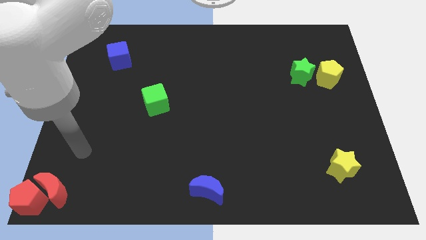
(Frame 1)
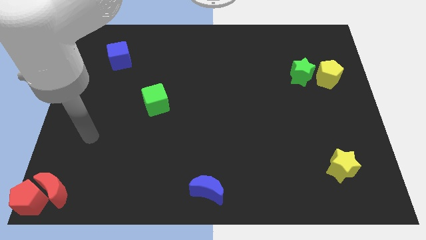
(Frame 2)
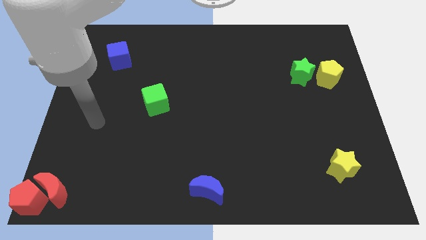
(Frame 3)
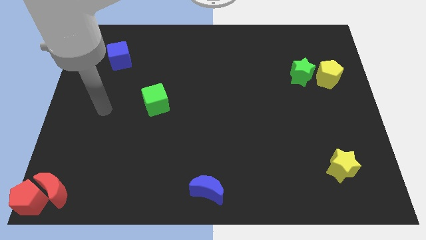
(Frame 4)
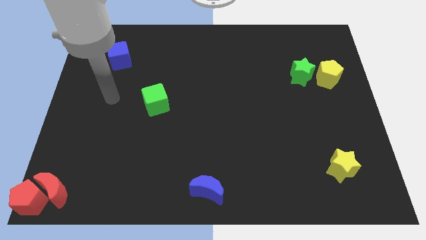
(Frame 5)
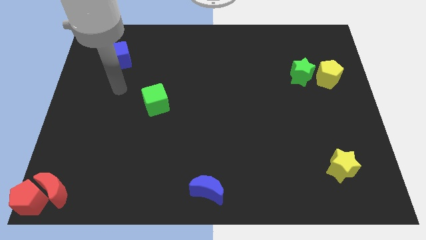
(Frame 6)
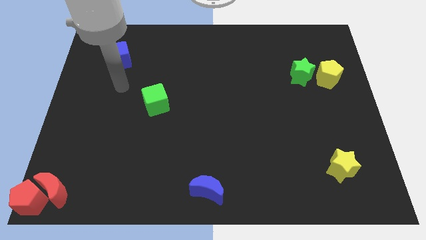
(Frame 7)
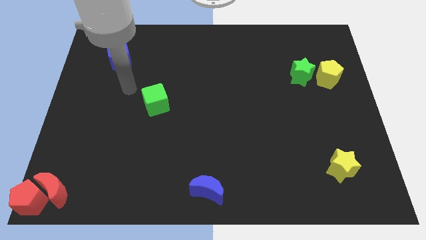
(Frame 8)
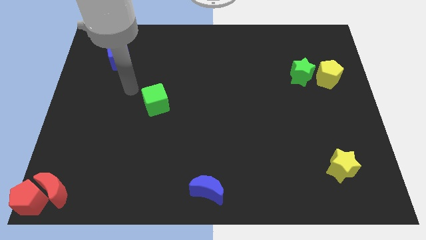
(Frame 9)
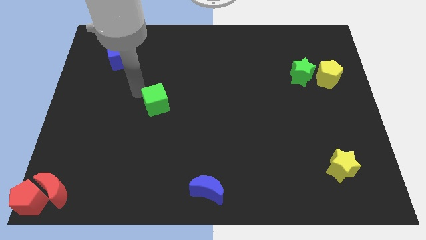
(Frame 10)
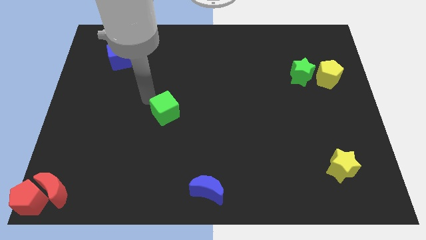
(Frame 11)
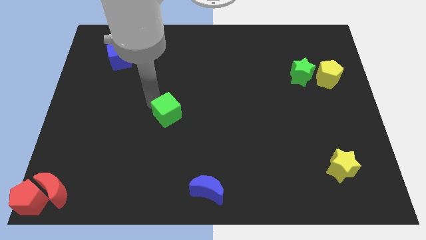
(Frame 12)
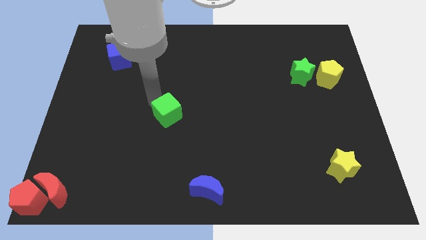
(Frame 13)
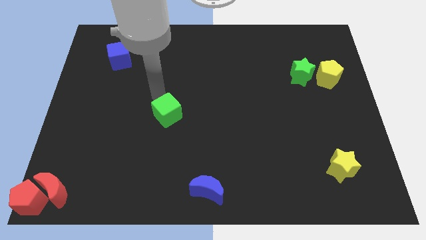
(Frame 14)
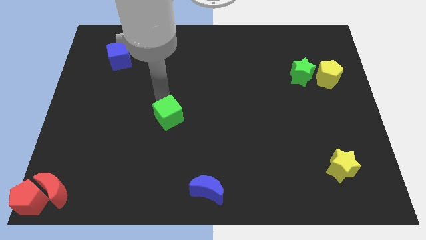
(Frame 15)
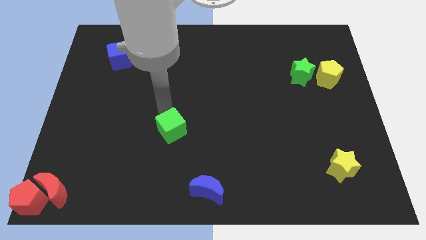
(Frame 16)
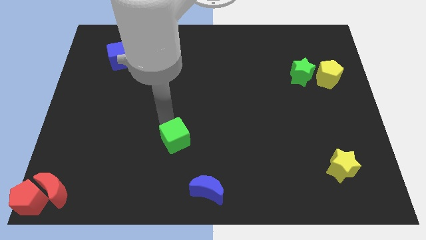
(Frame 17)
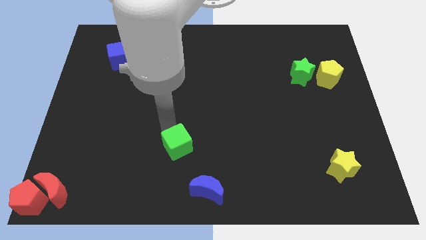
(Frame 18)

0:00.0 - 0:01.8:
push the green cube towards the top side of the blue crescent

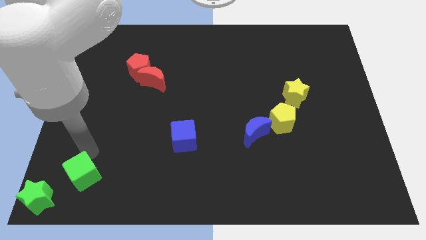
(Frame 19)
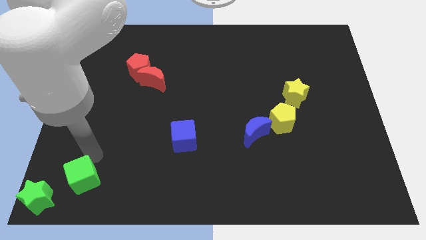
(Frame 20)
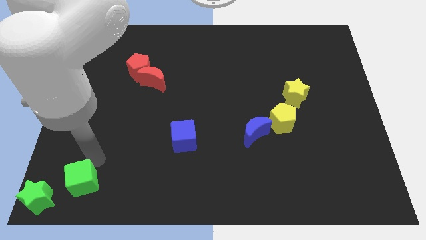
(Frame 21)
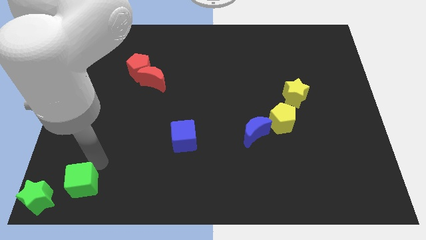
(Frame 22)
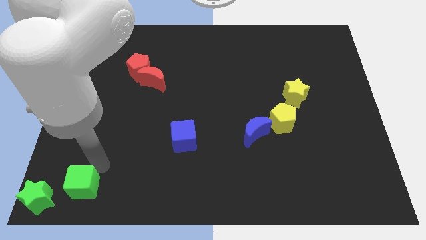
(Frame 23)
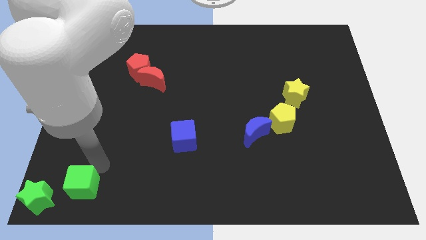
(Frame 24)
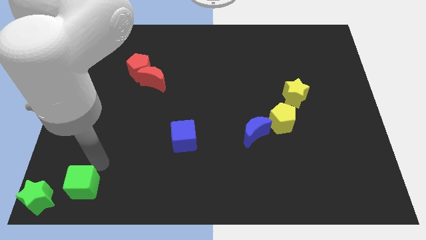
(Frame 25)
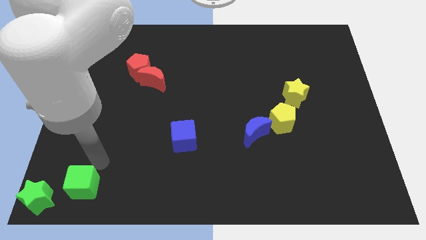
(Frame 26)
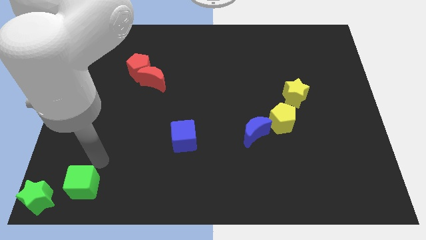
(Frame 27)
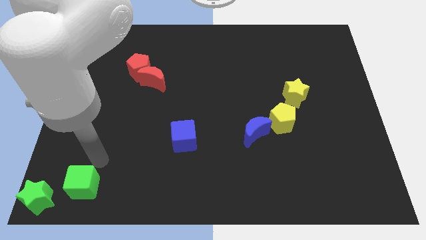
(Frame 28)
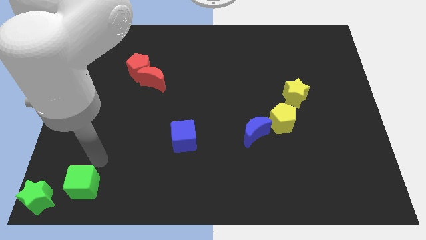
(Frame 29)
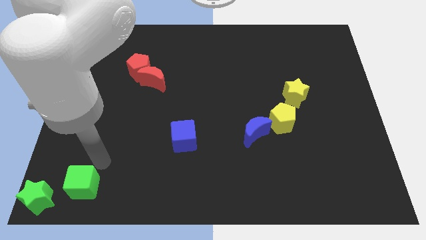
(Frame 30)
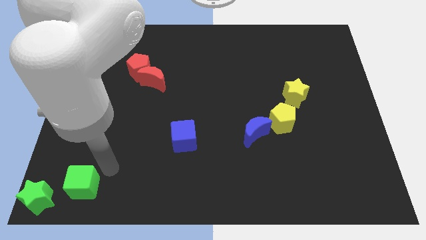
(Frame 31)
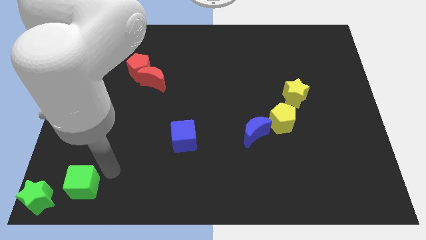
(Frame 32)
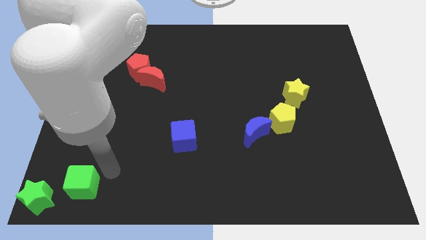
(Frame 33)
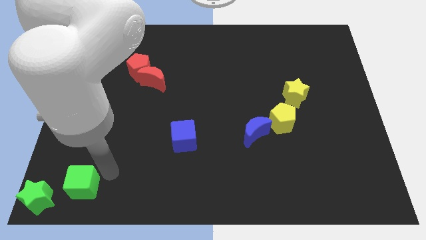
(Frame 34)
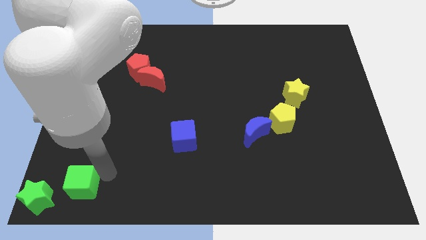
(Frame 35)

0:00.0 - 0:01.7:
place the green cube close to the green star

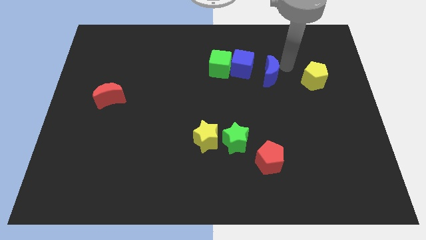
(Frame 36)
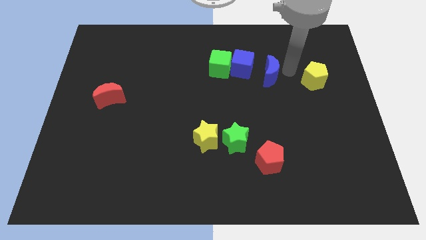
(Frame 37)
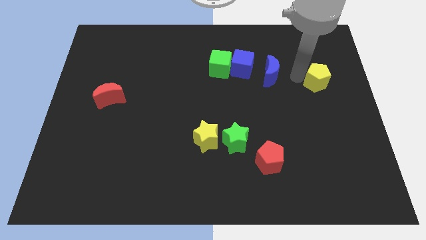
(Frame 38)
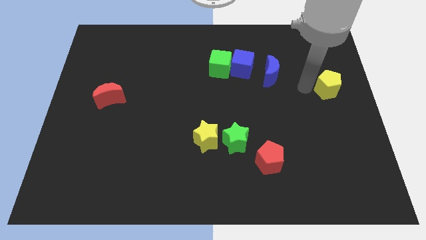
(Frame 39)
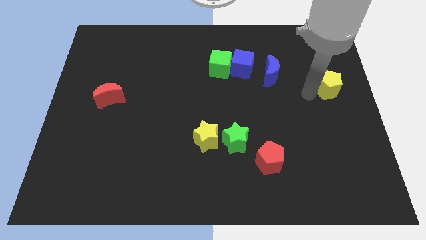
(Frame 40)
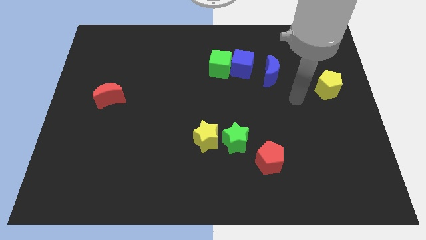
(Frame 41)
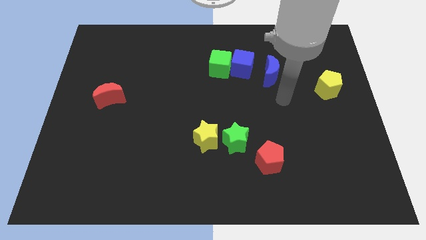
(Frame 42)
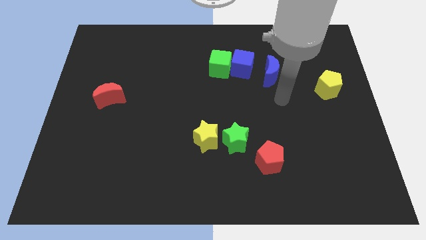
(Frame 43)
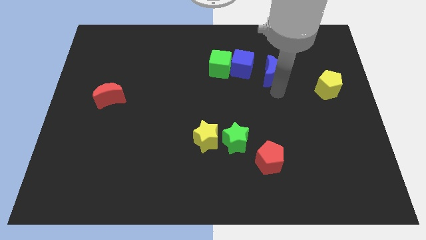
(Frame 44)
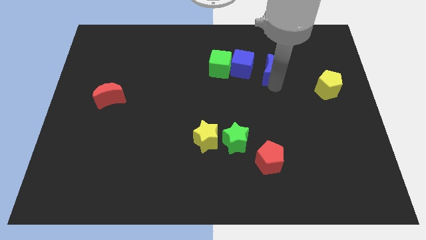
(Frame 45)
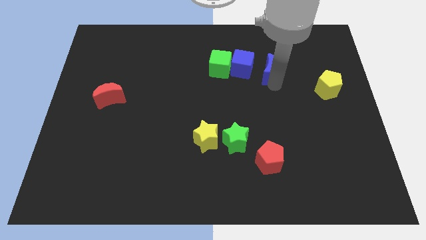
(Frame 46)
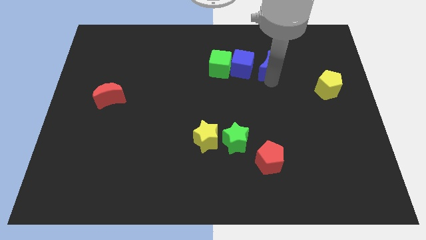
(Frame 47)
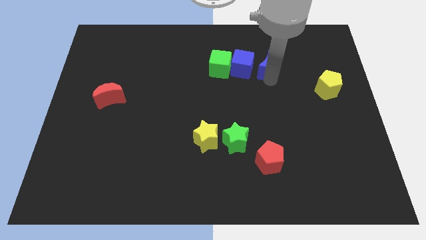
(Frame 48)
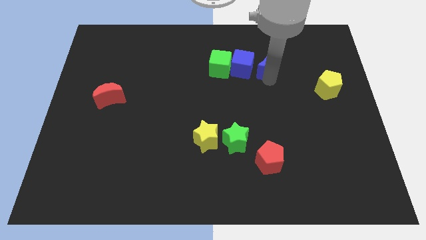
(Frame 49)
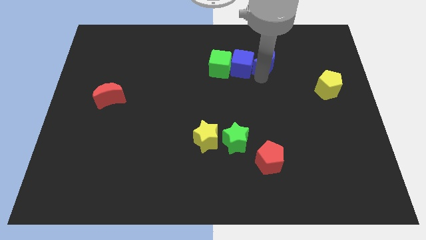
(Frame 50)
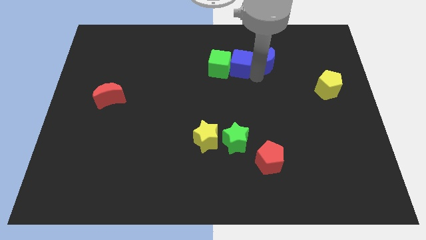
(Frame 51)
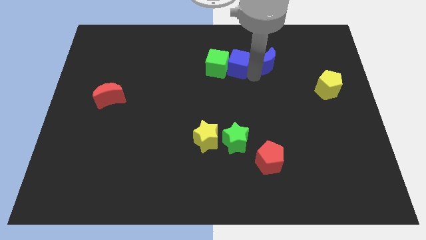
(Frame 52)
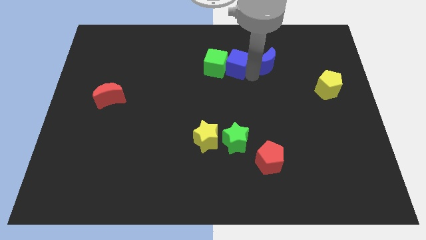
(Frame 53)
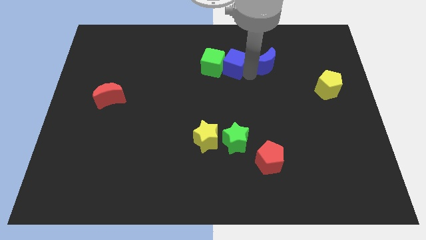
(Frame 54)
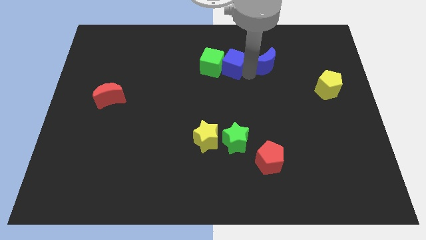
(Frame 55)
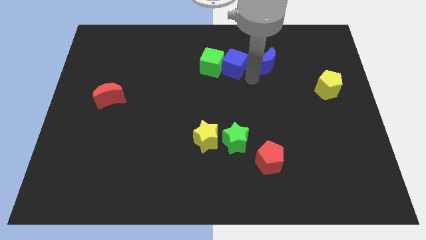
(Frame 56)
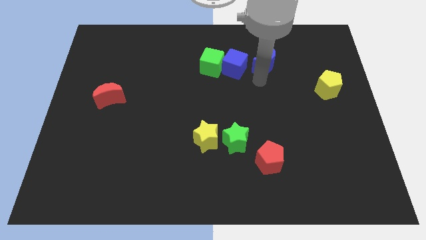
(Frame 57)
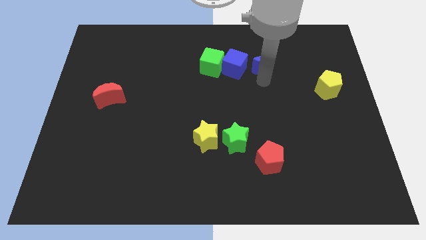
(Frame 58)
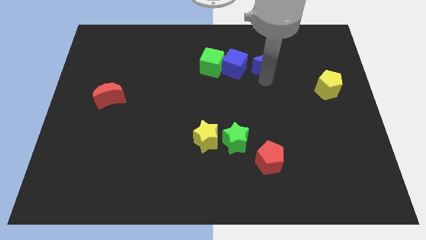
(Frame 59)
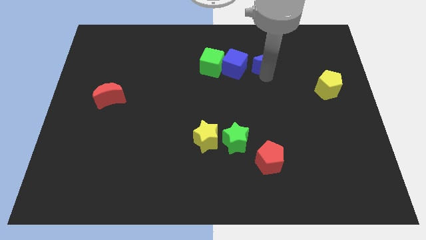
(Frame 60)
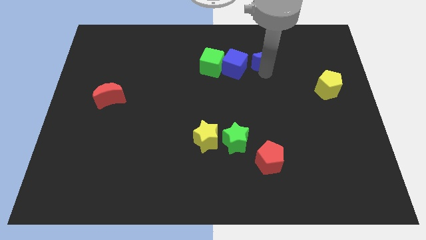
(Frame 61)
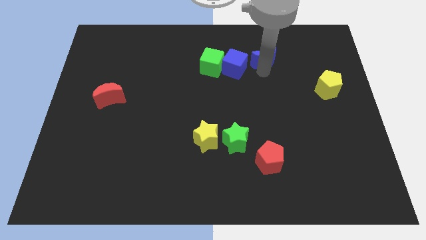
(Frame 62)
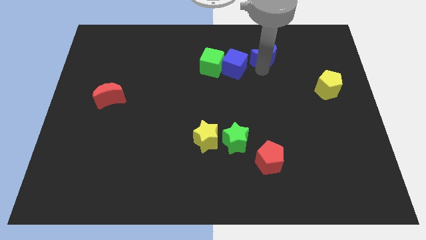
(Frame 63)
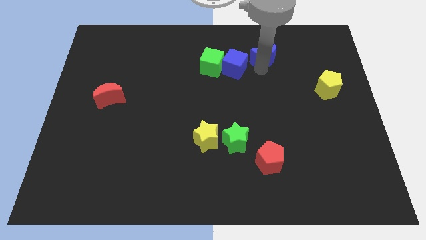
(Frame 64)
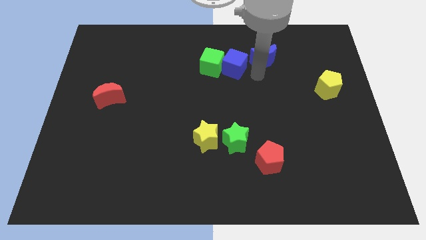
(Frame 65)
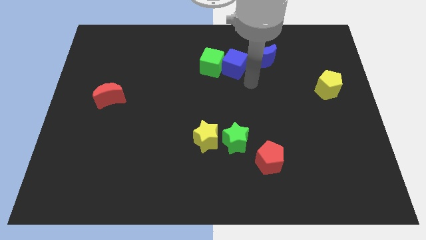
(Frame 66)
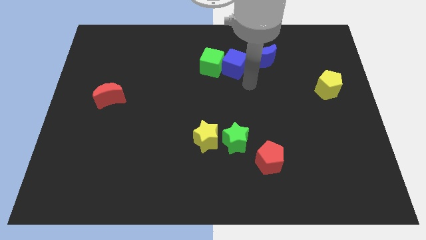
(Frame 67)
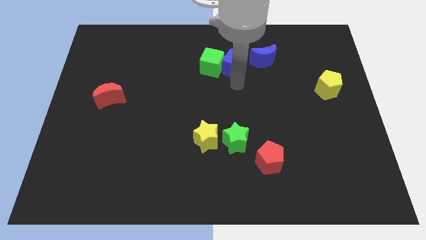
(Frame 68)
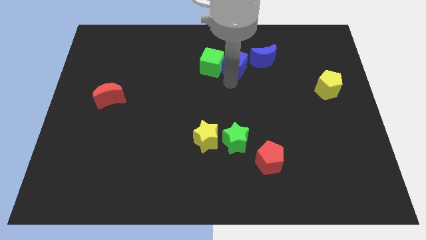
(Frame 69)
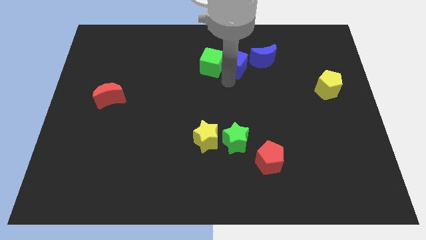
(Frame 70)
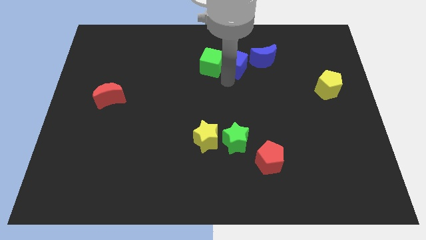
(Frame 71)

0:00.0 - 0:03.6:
move blue moon slightly up

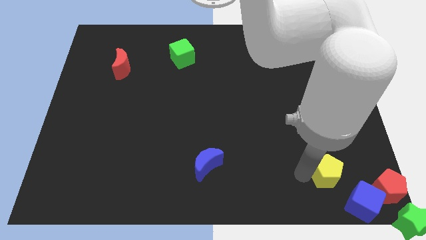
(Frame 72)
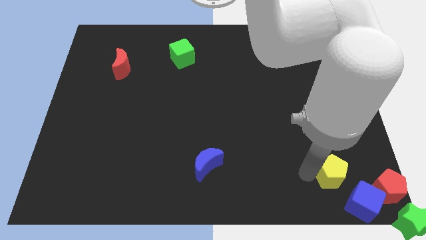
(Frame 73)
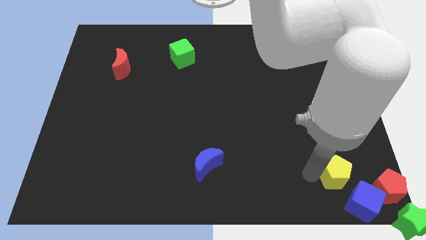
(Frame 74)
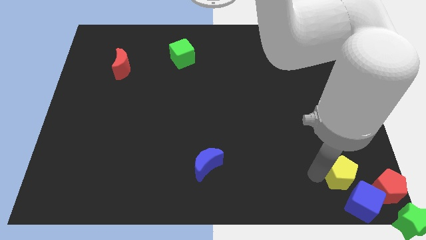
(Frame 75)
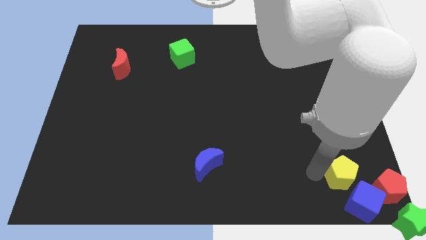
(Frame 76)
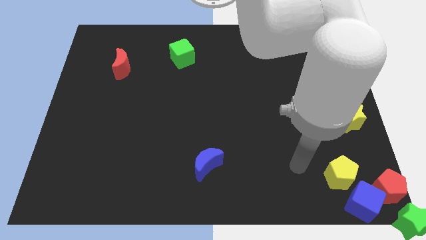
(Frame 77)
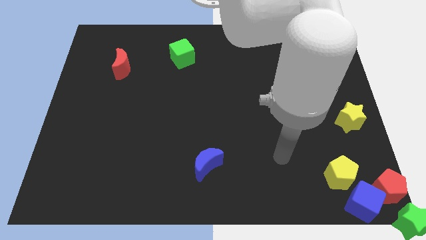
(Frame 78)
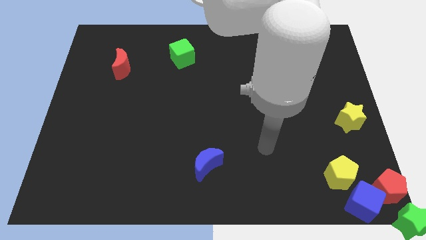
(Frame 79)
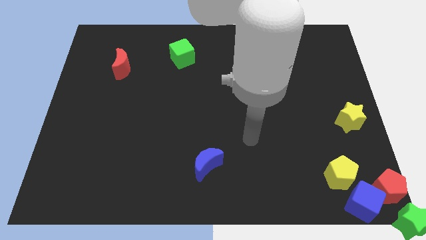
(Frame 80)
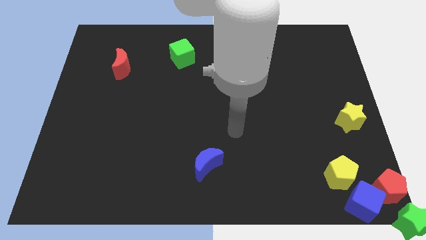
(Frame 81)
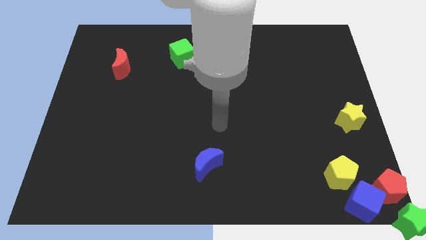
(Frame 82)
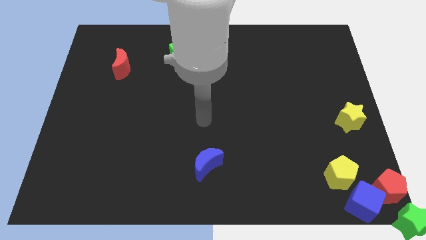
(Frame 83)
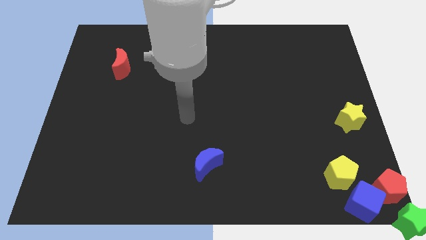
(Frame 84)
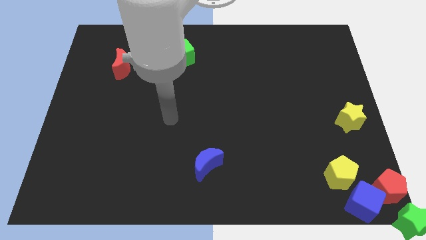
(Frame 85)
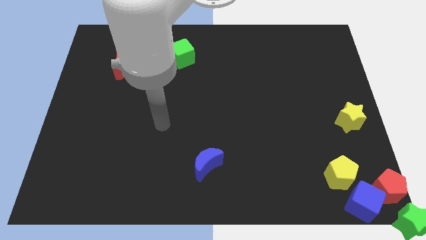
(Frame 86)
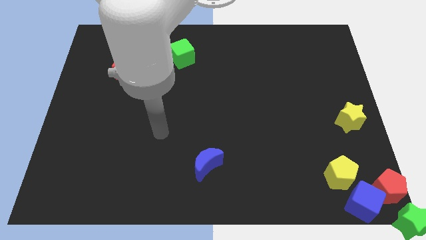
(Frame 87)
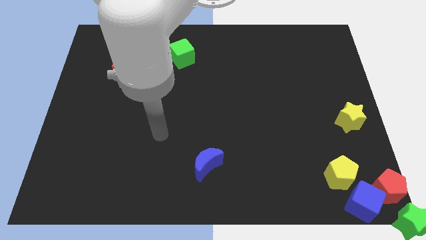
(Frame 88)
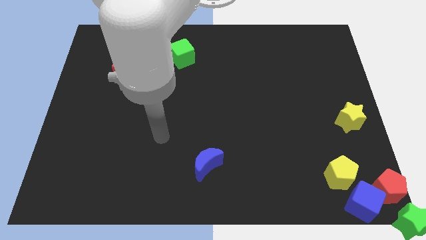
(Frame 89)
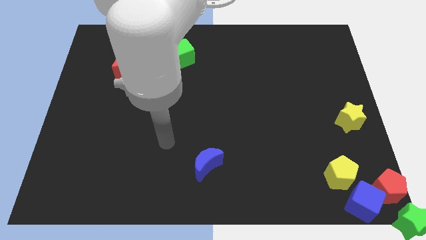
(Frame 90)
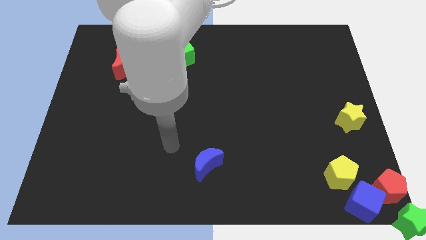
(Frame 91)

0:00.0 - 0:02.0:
move the yellow pentagon towards the top left side of the blue cube
